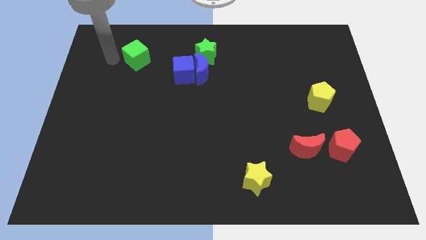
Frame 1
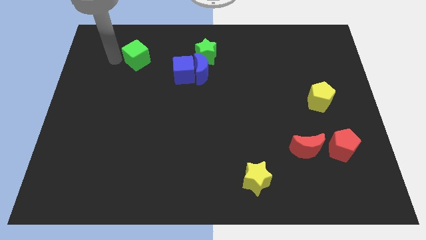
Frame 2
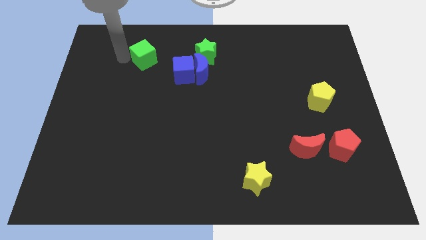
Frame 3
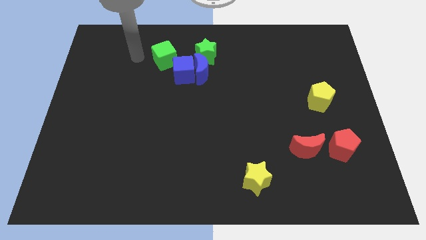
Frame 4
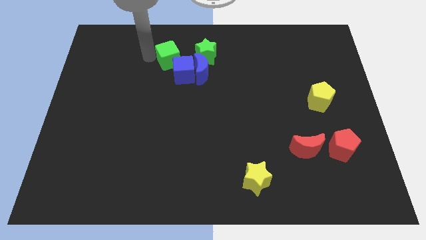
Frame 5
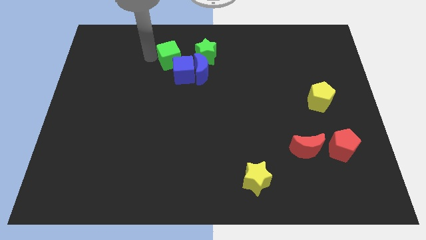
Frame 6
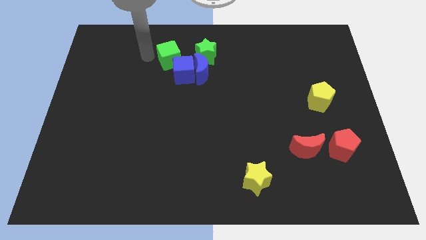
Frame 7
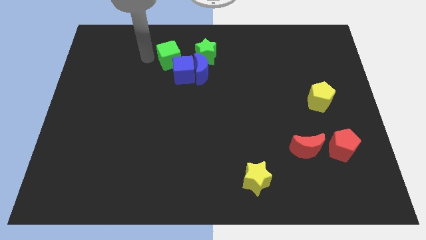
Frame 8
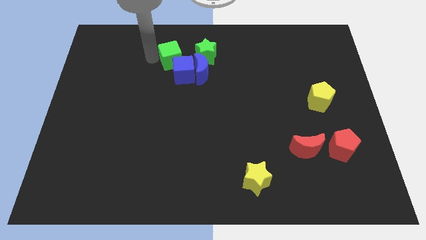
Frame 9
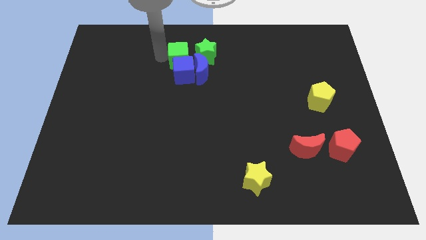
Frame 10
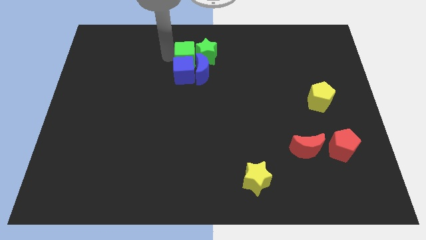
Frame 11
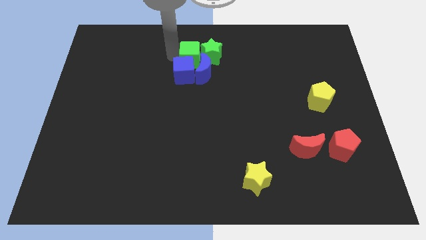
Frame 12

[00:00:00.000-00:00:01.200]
put the green cube at the top of the blue cube

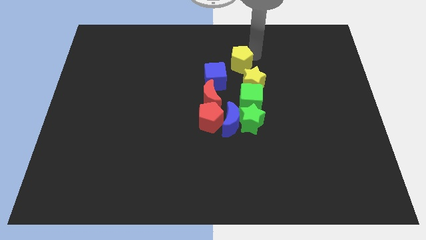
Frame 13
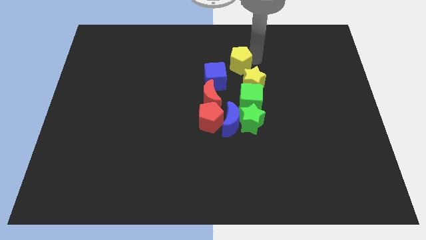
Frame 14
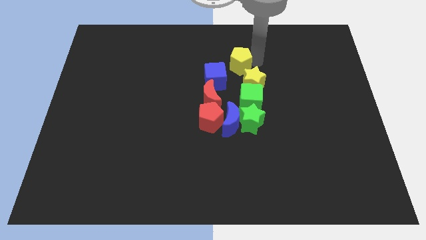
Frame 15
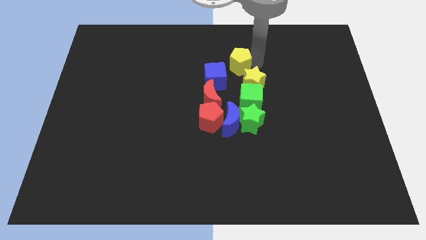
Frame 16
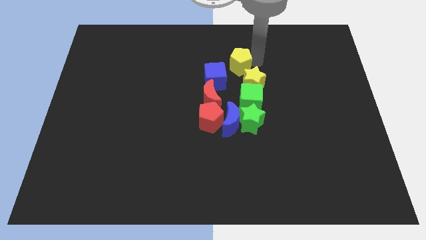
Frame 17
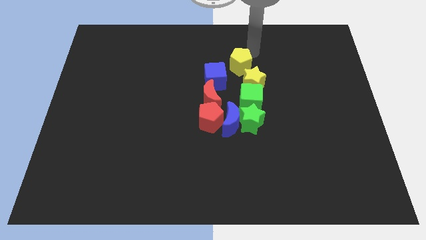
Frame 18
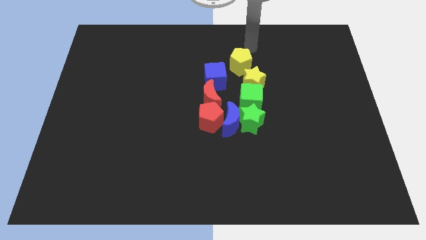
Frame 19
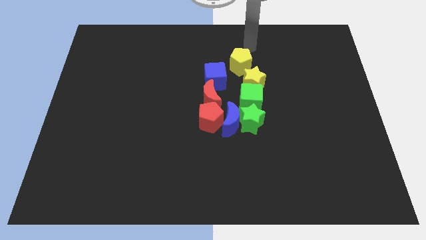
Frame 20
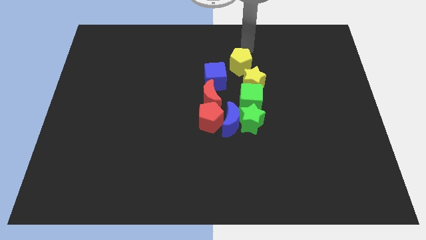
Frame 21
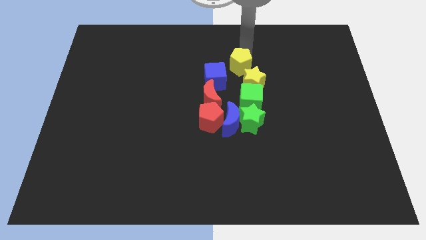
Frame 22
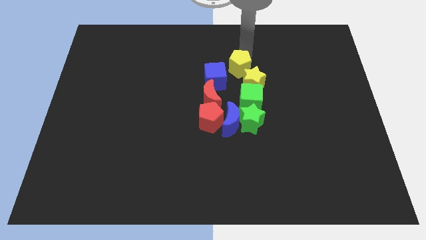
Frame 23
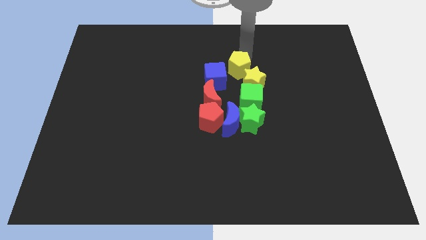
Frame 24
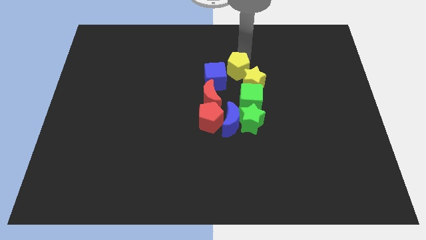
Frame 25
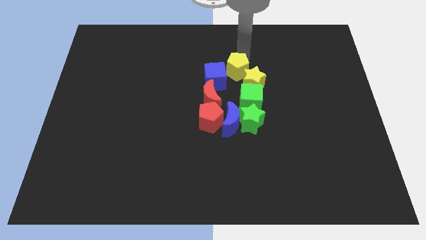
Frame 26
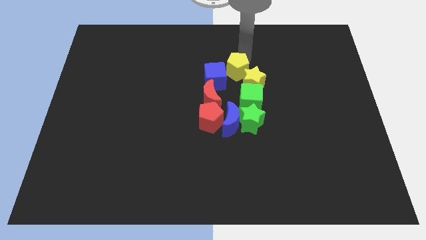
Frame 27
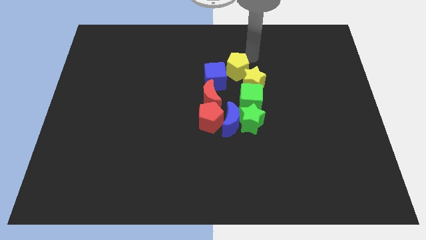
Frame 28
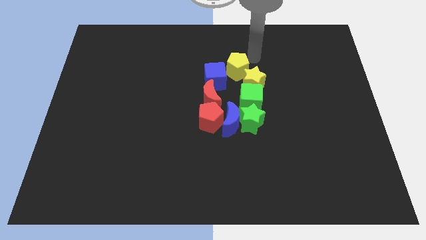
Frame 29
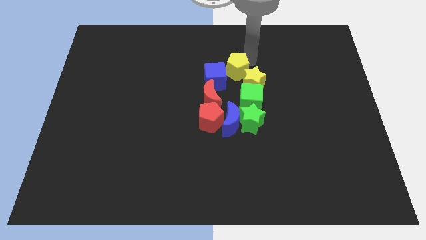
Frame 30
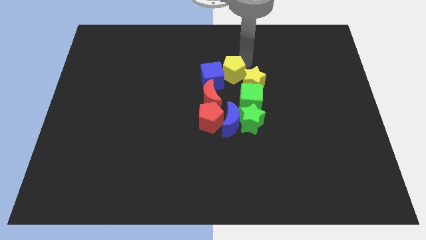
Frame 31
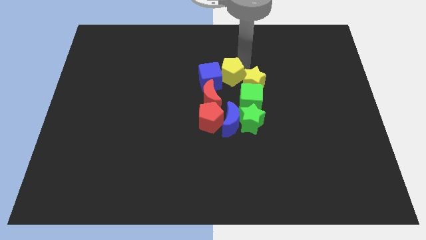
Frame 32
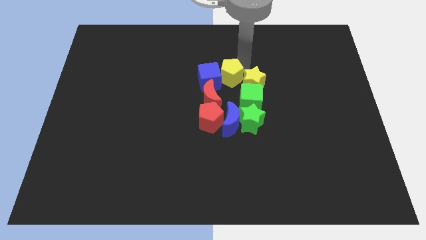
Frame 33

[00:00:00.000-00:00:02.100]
move the yellow pentagon in the middle of the blue cube and yellow star

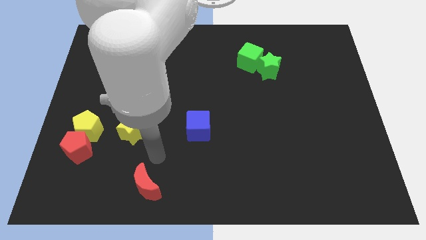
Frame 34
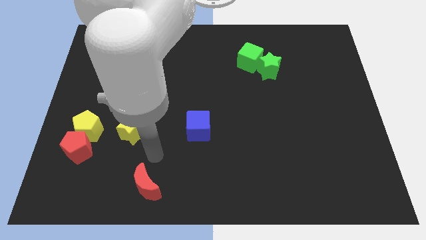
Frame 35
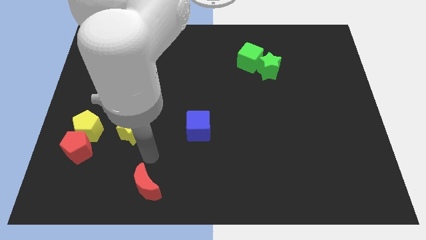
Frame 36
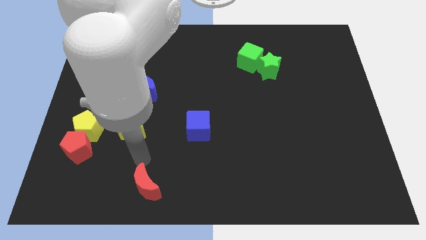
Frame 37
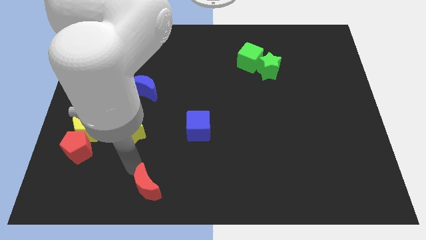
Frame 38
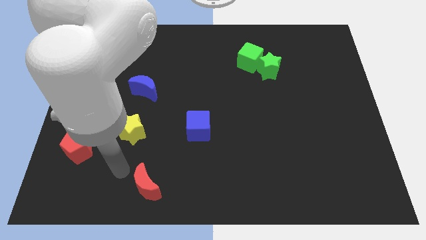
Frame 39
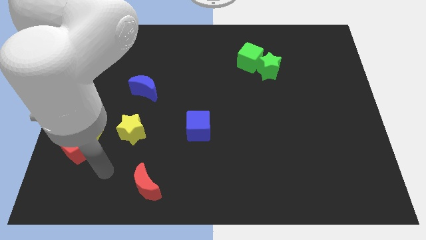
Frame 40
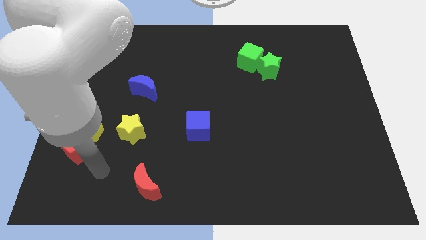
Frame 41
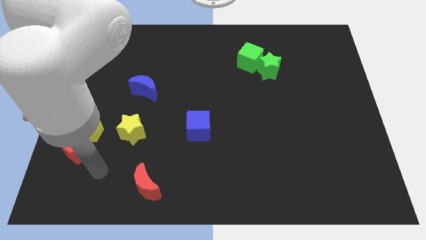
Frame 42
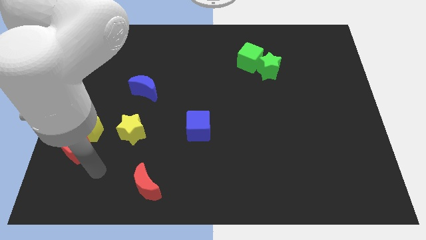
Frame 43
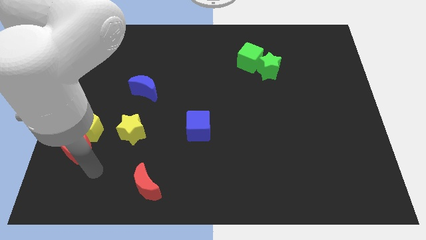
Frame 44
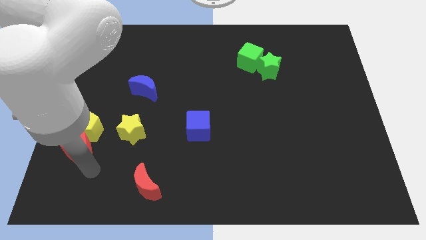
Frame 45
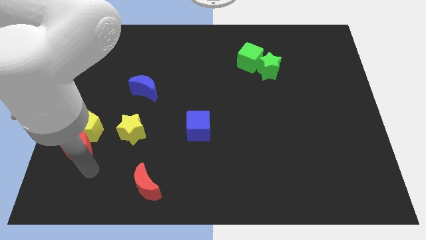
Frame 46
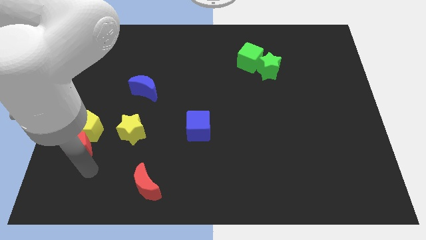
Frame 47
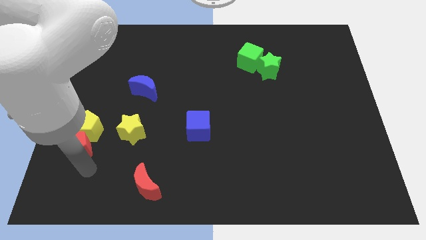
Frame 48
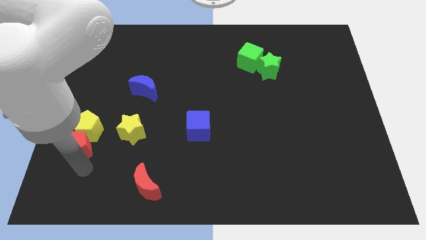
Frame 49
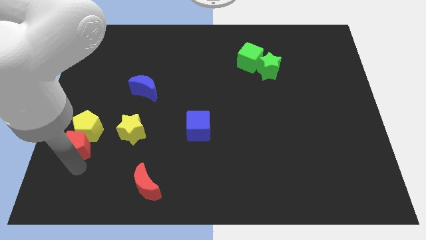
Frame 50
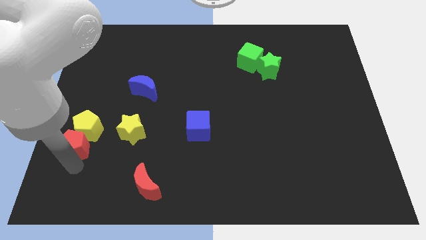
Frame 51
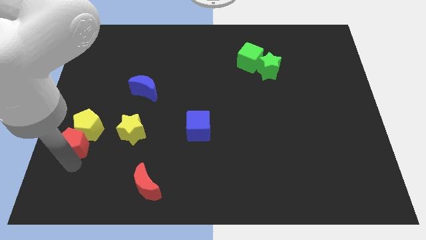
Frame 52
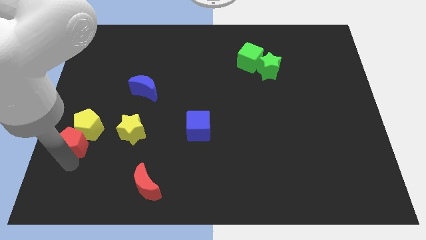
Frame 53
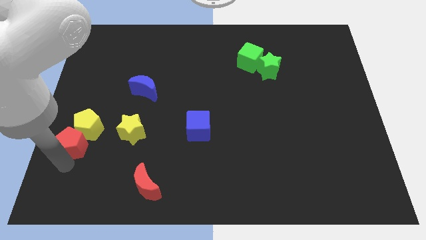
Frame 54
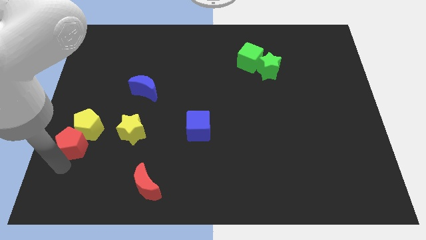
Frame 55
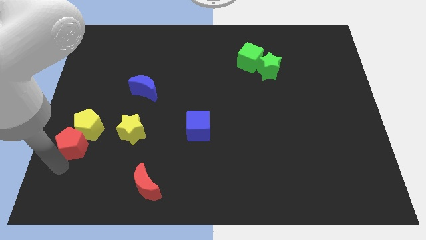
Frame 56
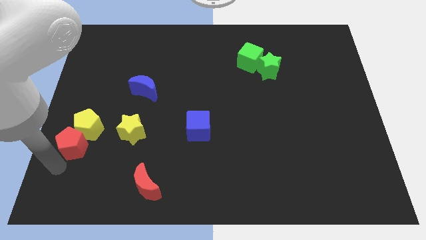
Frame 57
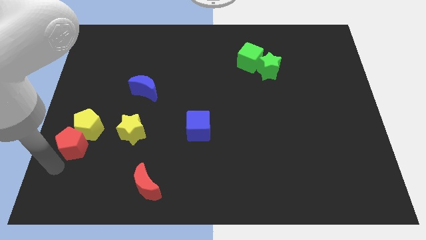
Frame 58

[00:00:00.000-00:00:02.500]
adjust the red pentagon diagonally yo the left bottom of the yellow pentagon

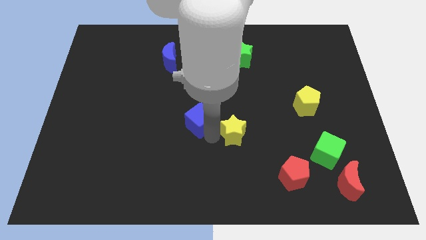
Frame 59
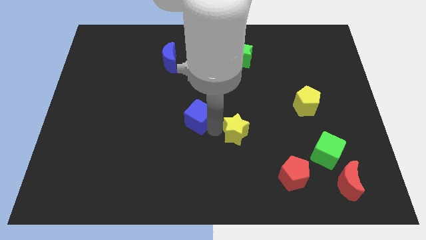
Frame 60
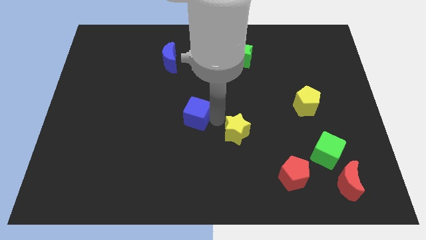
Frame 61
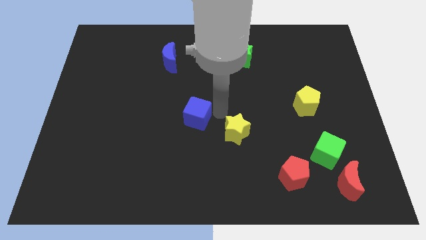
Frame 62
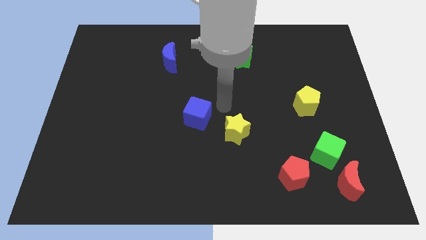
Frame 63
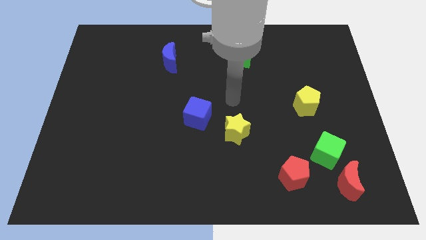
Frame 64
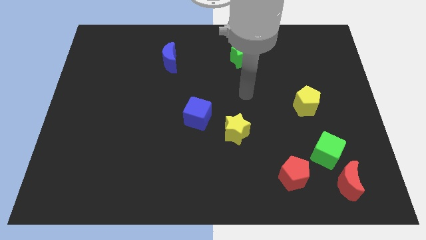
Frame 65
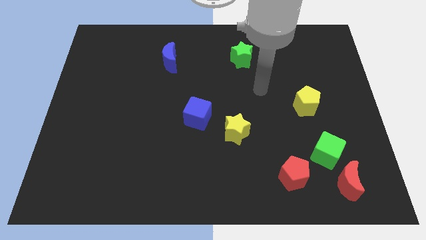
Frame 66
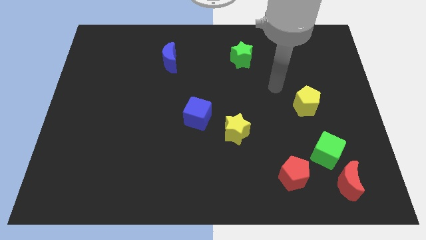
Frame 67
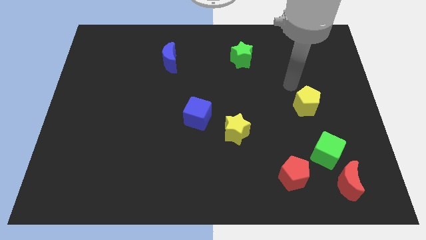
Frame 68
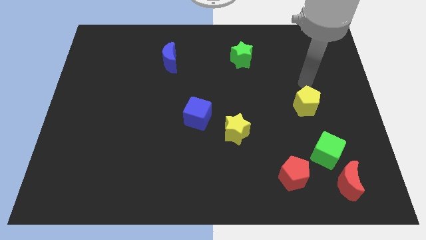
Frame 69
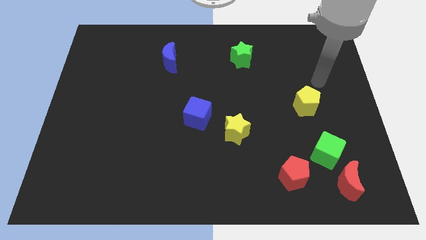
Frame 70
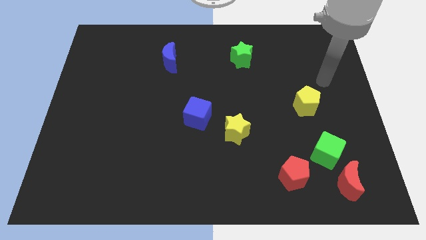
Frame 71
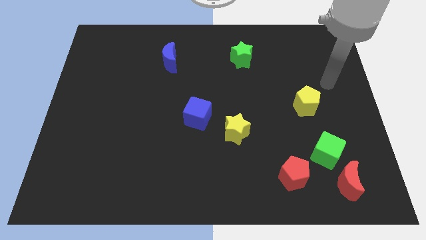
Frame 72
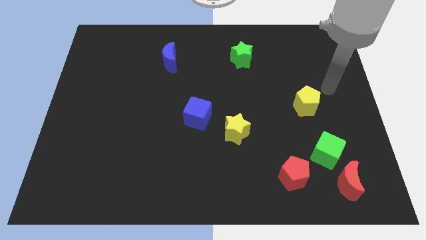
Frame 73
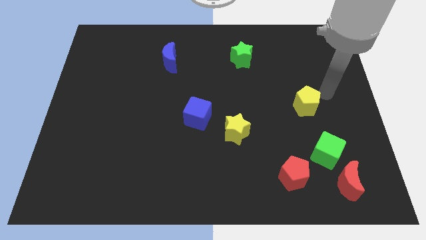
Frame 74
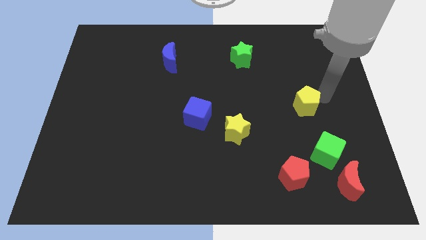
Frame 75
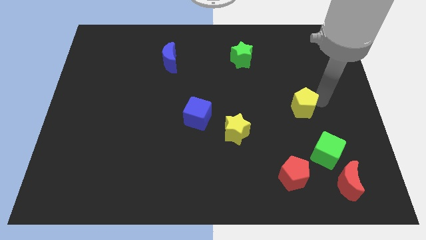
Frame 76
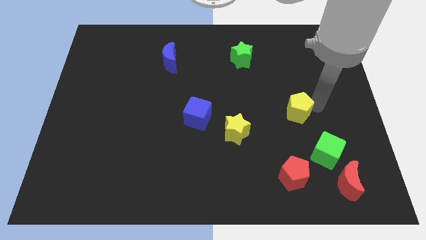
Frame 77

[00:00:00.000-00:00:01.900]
move the yellow pentagon slightly towards left

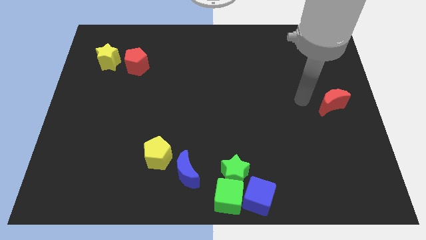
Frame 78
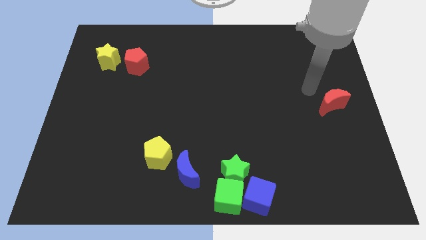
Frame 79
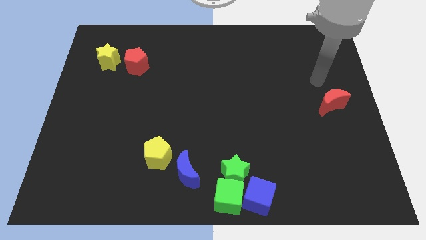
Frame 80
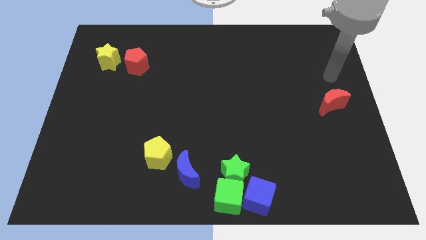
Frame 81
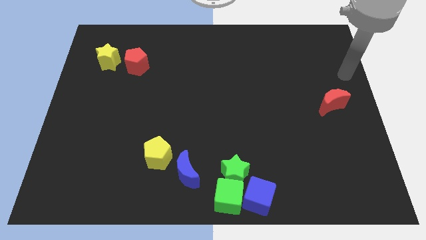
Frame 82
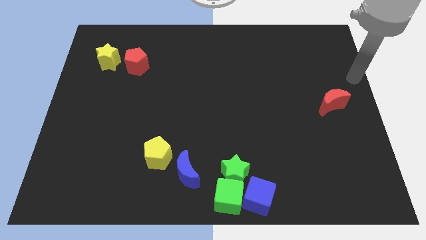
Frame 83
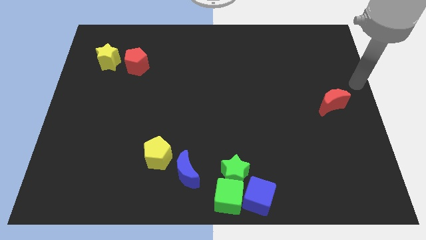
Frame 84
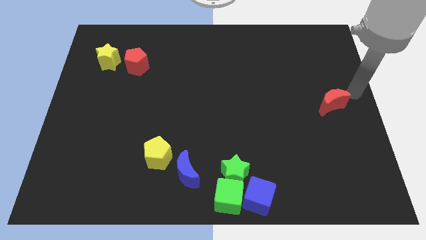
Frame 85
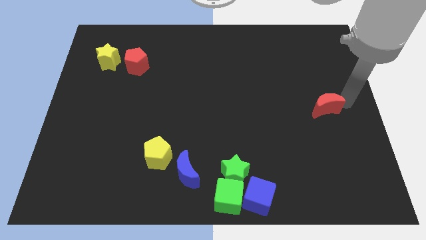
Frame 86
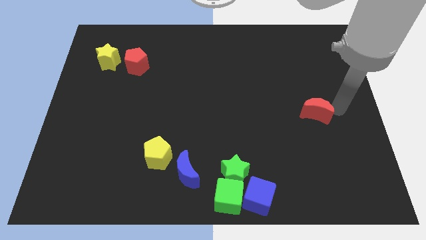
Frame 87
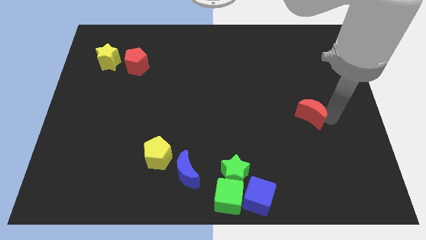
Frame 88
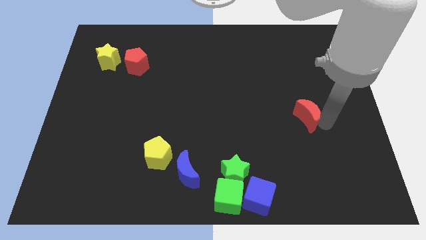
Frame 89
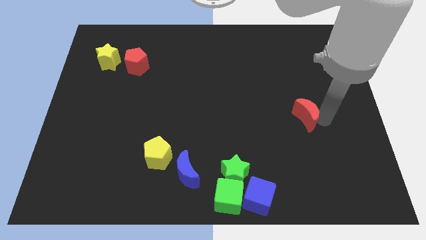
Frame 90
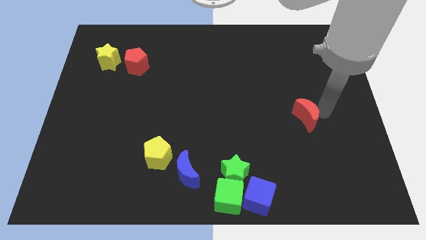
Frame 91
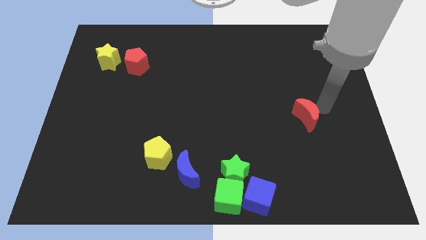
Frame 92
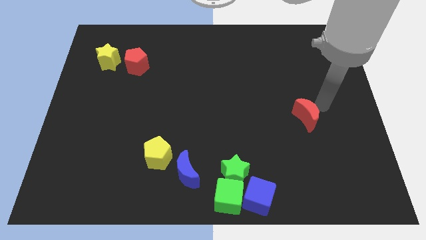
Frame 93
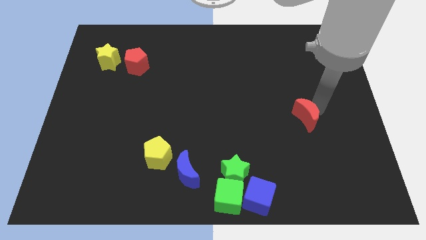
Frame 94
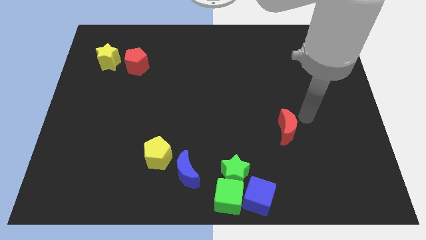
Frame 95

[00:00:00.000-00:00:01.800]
move the red crescent towards the bottom center
